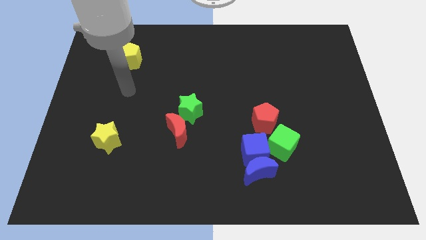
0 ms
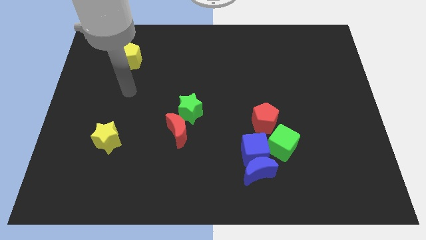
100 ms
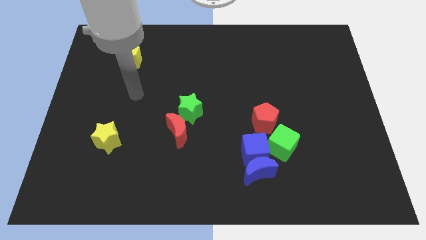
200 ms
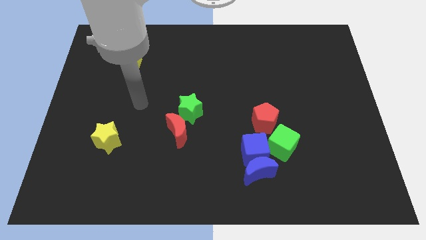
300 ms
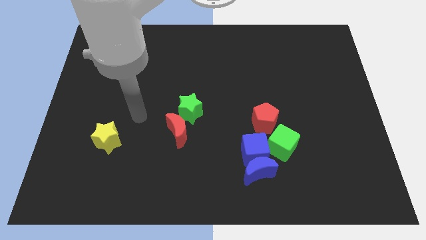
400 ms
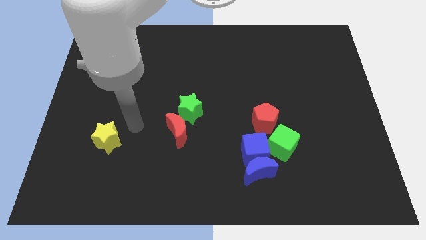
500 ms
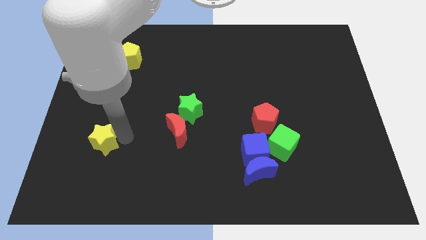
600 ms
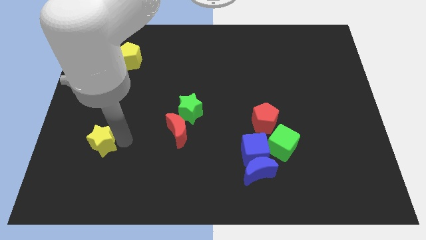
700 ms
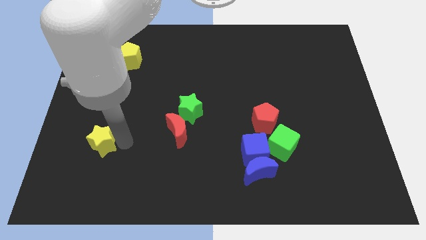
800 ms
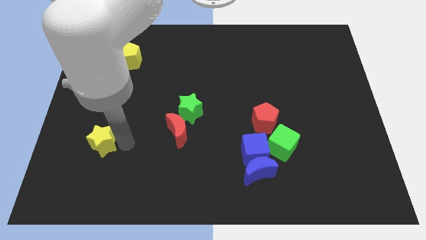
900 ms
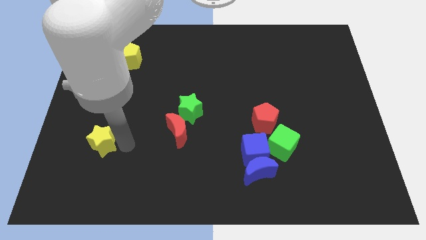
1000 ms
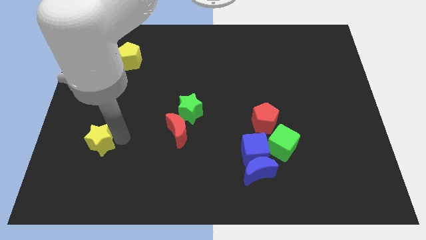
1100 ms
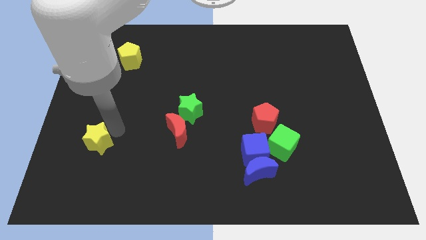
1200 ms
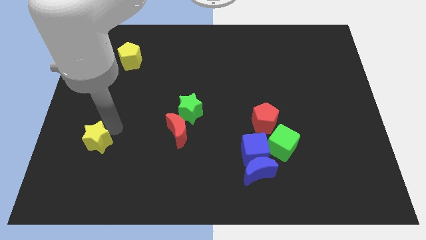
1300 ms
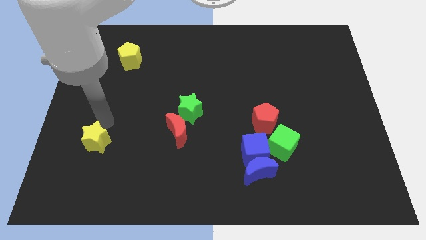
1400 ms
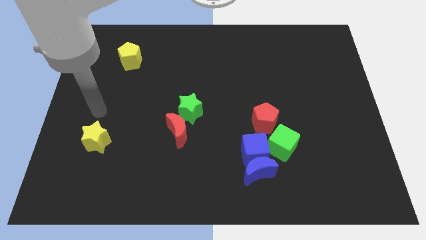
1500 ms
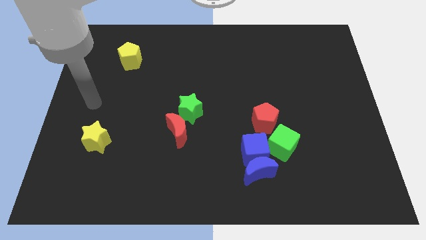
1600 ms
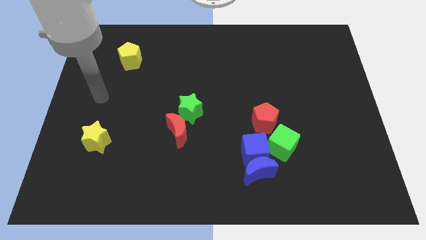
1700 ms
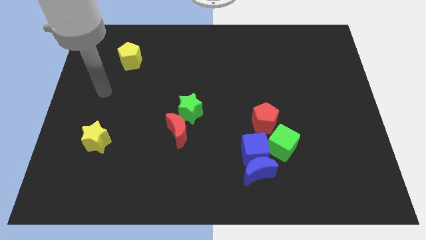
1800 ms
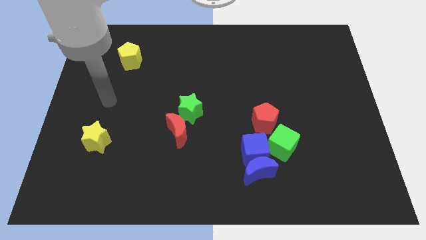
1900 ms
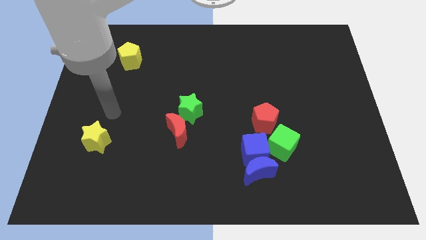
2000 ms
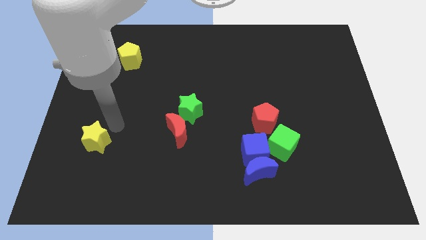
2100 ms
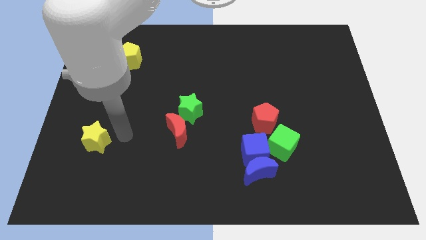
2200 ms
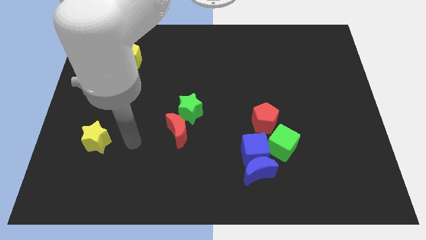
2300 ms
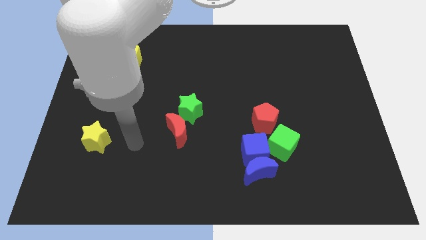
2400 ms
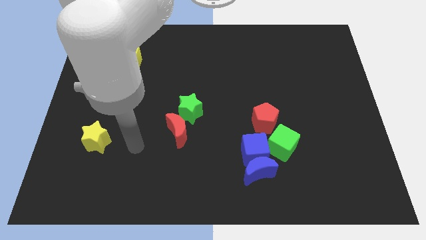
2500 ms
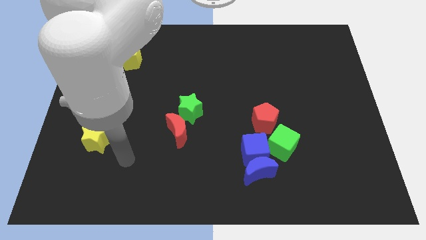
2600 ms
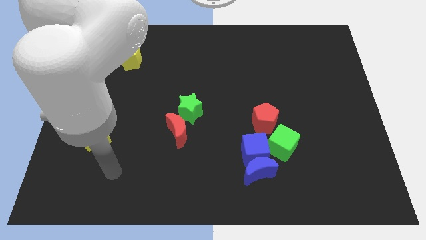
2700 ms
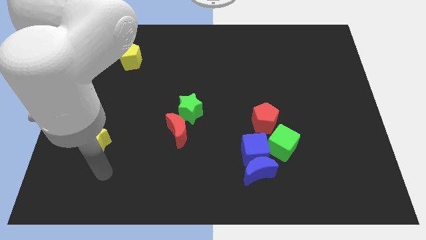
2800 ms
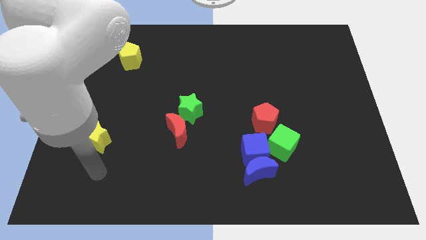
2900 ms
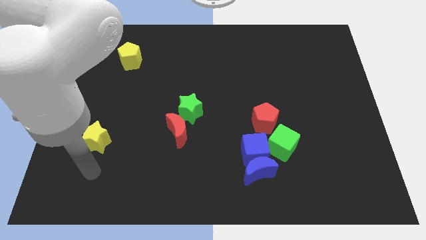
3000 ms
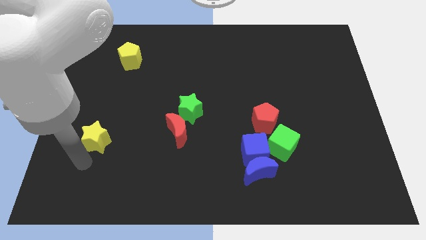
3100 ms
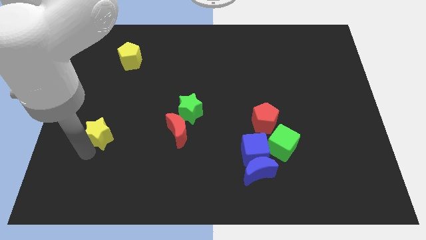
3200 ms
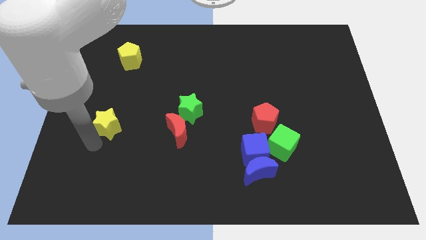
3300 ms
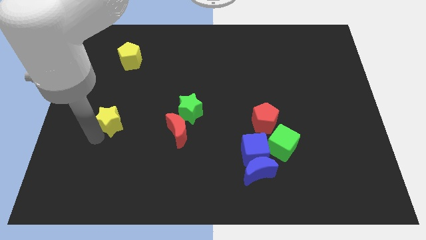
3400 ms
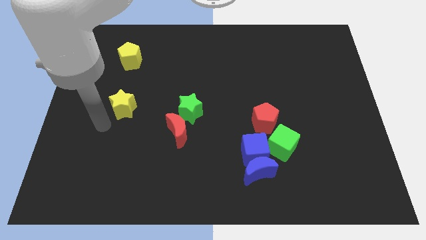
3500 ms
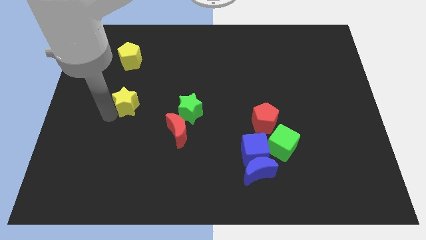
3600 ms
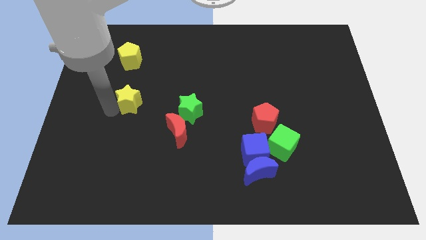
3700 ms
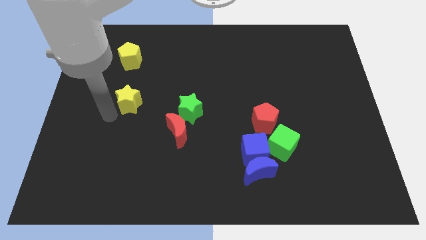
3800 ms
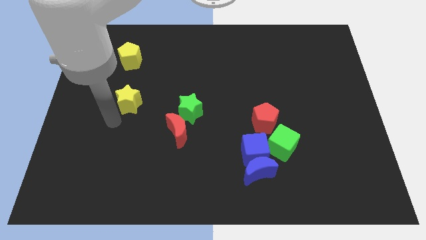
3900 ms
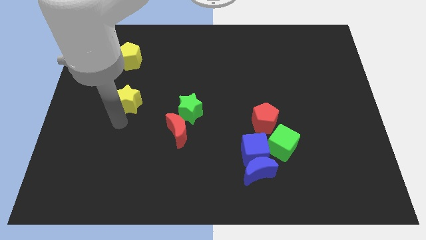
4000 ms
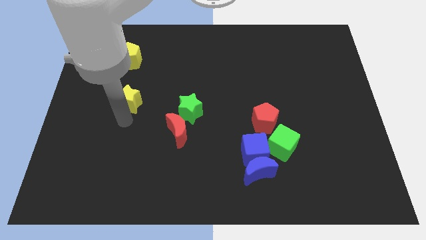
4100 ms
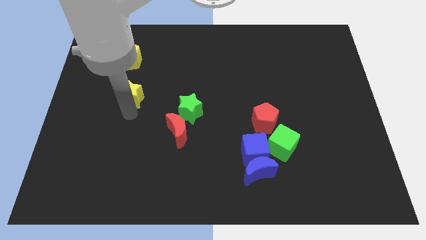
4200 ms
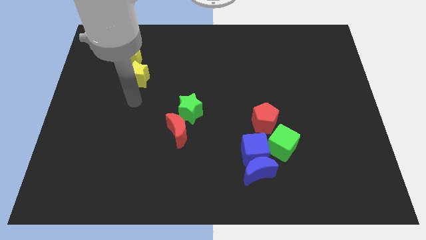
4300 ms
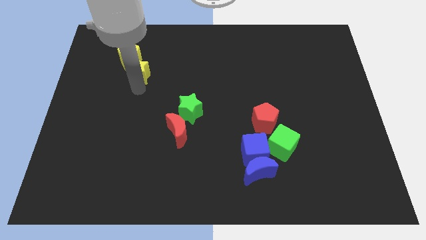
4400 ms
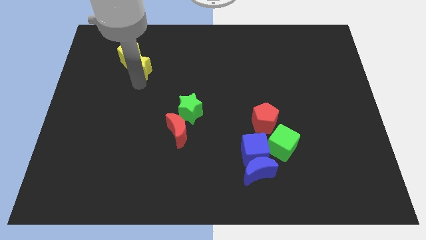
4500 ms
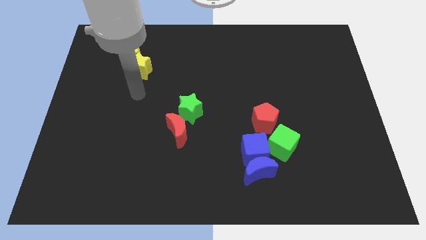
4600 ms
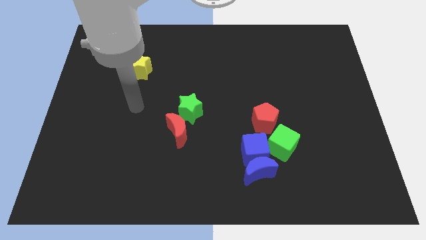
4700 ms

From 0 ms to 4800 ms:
push the yellow star right bottom of the yellow pentagon

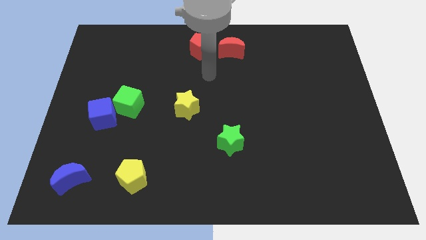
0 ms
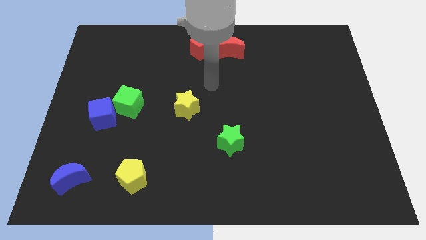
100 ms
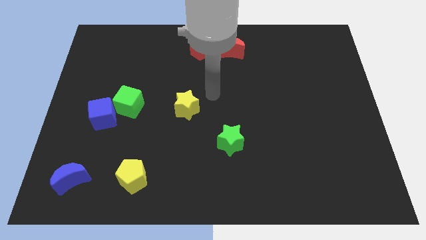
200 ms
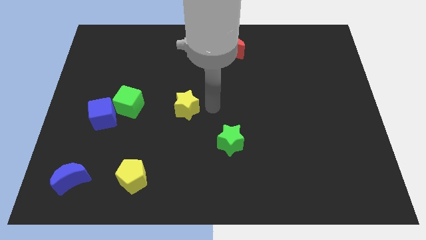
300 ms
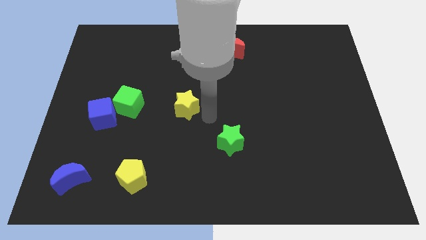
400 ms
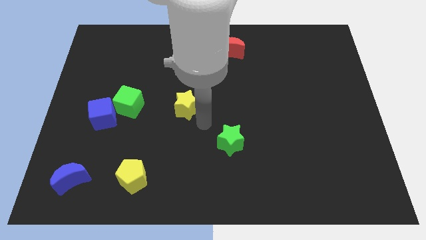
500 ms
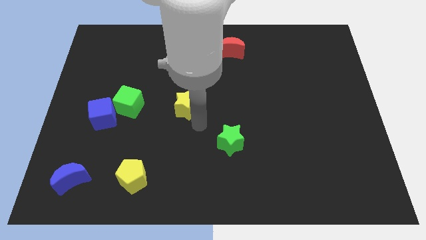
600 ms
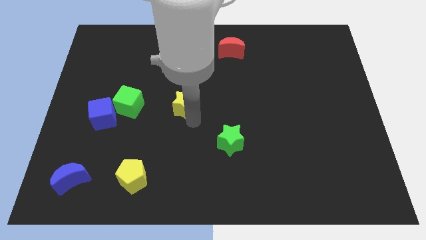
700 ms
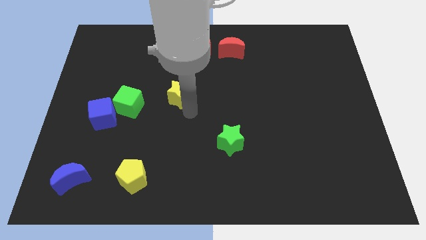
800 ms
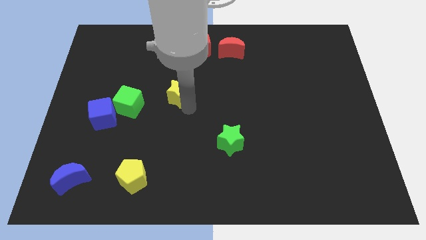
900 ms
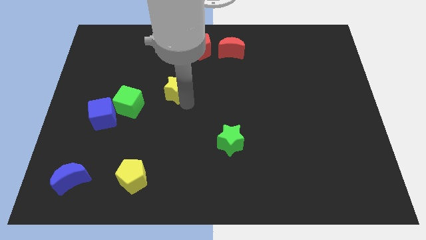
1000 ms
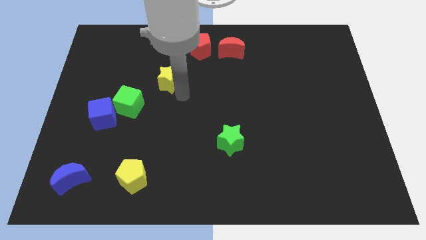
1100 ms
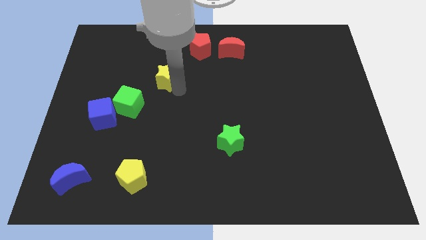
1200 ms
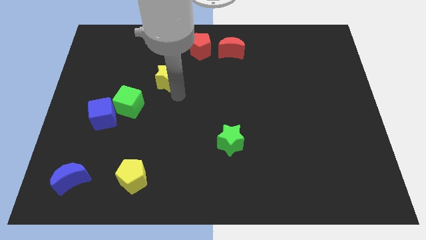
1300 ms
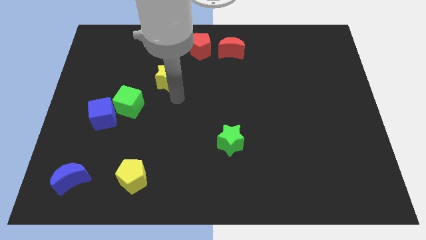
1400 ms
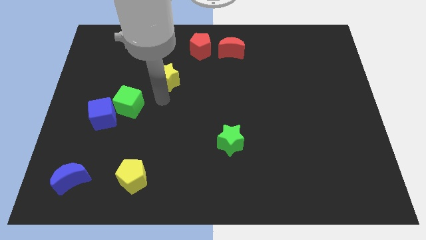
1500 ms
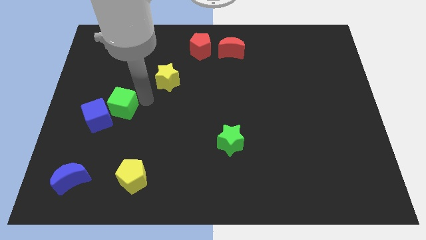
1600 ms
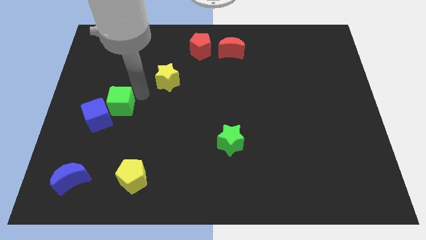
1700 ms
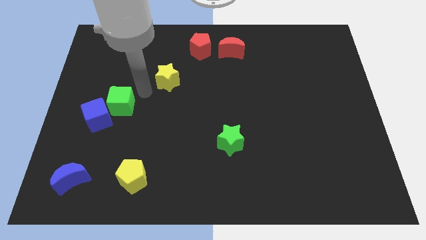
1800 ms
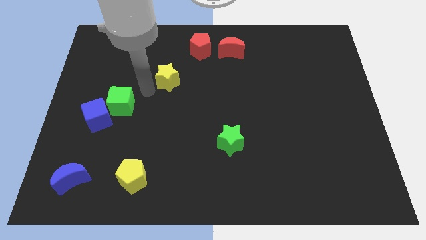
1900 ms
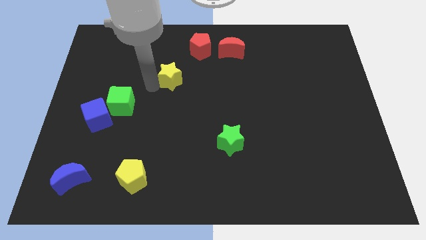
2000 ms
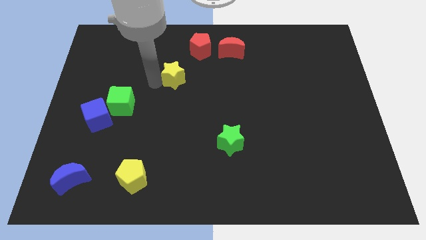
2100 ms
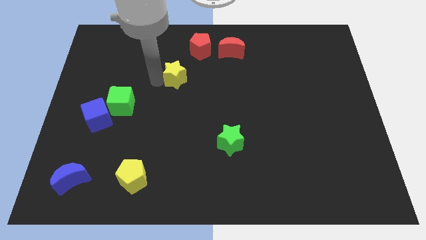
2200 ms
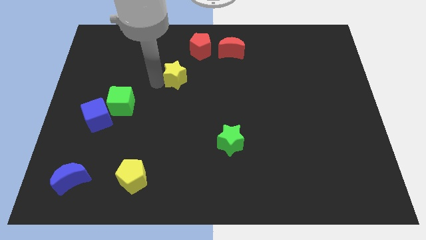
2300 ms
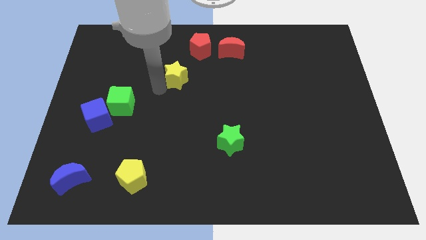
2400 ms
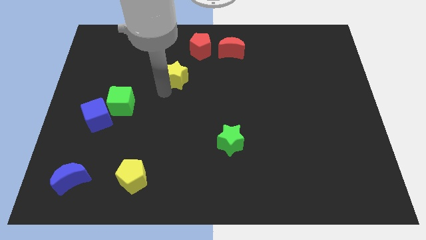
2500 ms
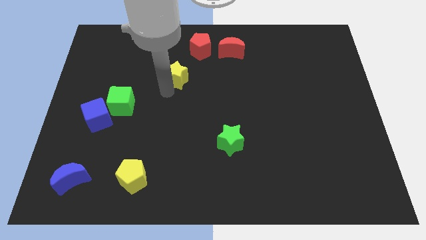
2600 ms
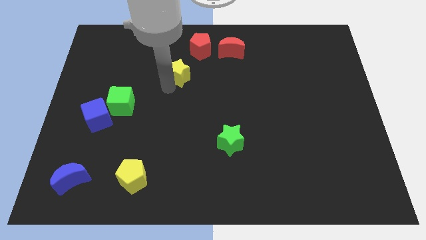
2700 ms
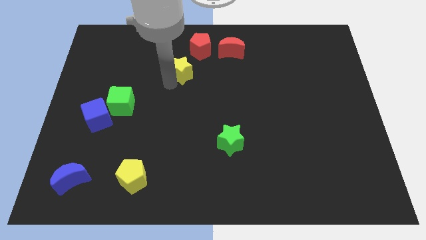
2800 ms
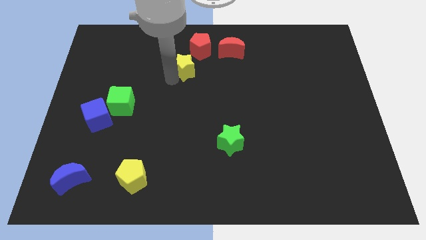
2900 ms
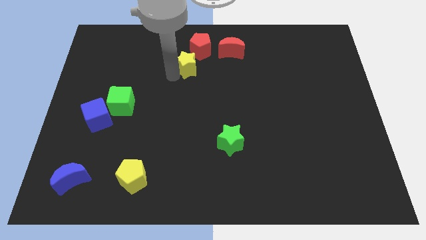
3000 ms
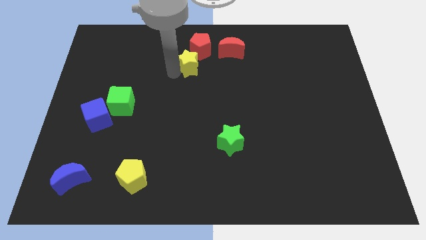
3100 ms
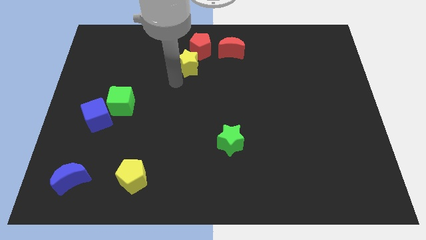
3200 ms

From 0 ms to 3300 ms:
slide the yellow star slightly towards the red pentagon

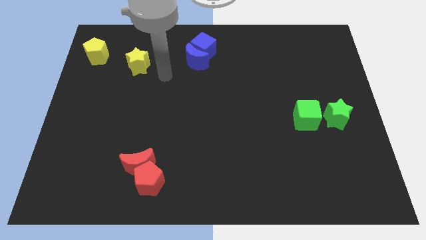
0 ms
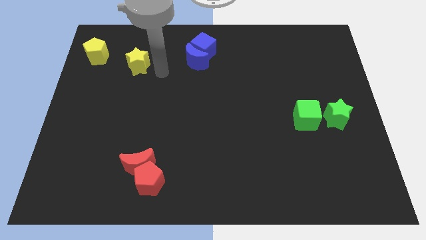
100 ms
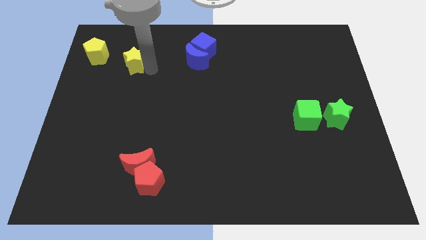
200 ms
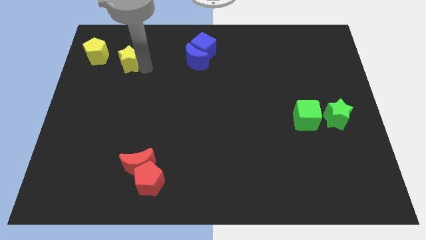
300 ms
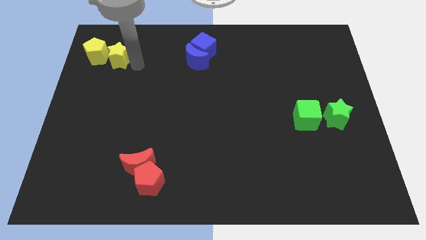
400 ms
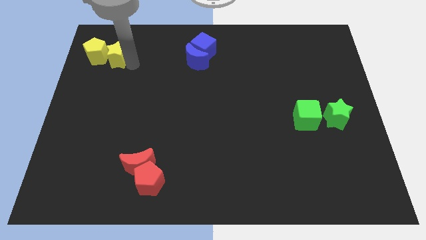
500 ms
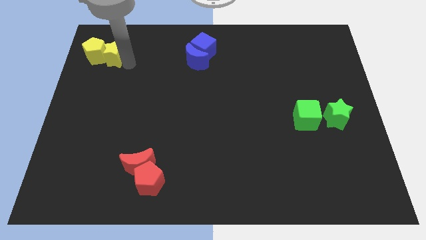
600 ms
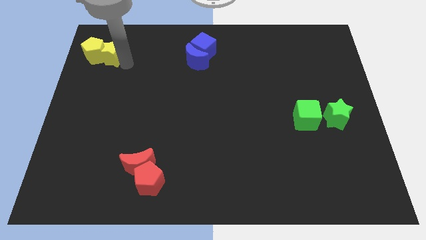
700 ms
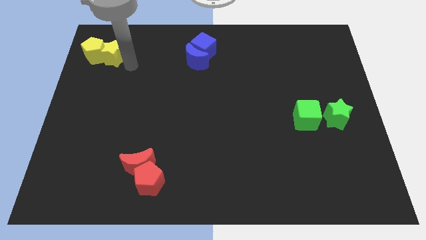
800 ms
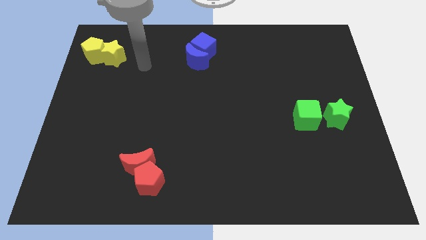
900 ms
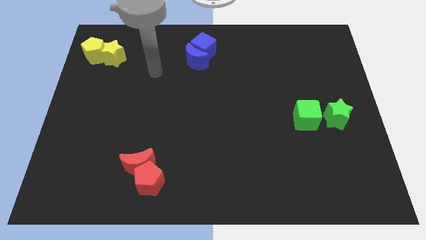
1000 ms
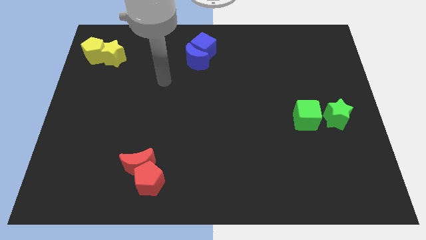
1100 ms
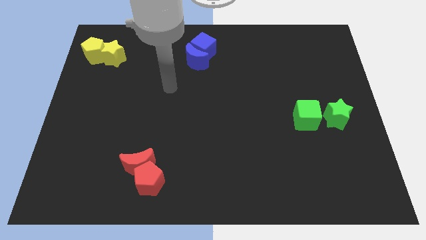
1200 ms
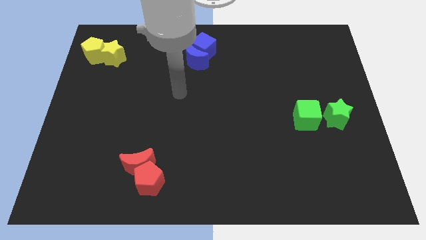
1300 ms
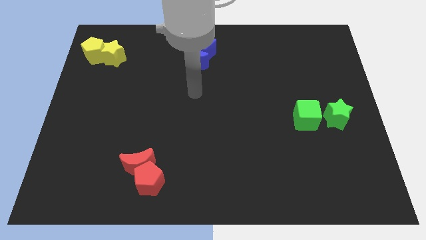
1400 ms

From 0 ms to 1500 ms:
push the yellow star into yellow pentagon
